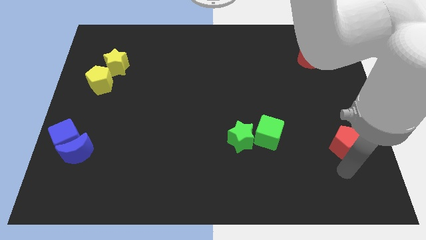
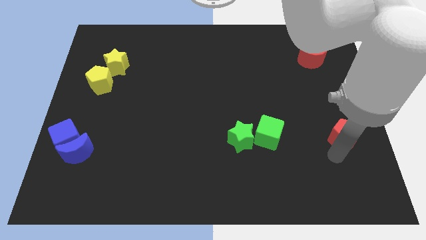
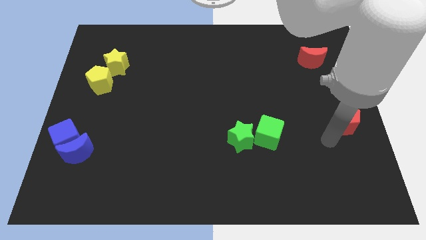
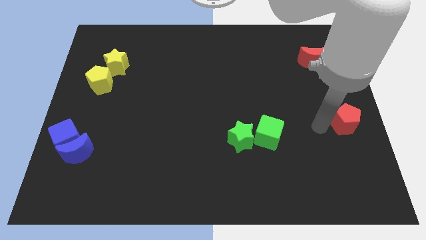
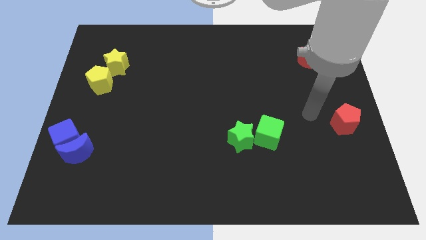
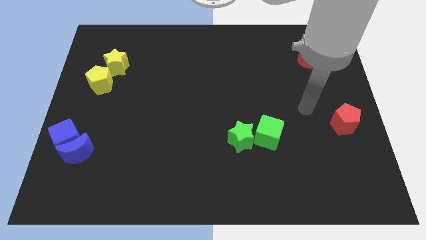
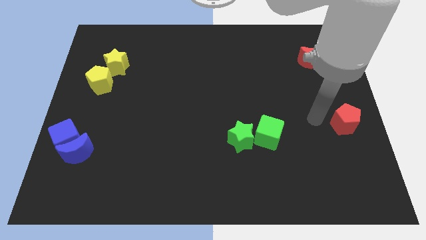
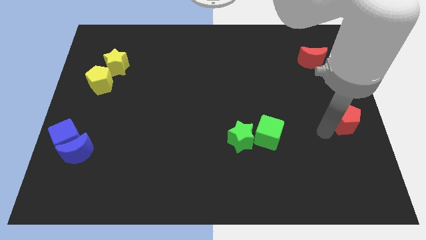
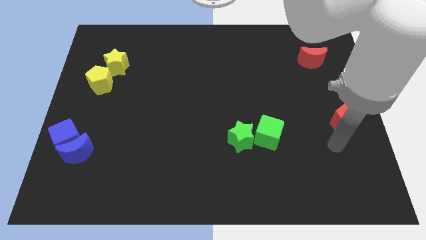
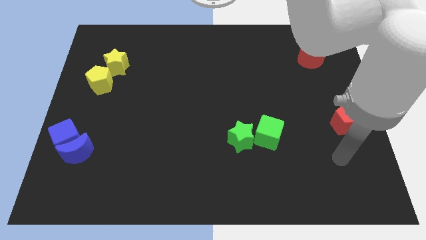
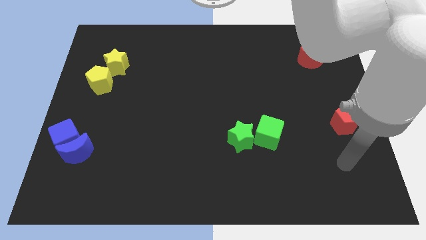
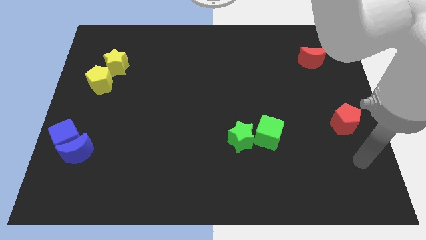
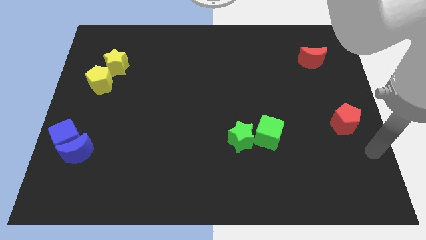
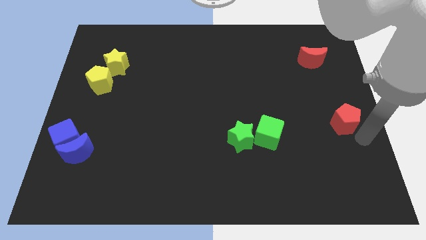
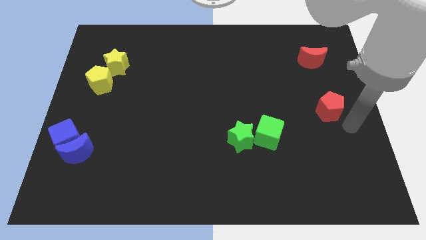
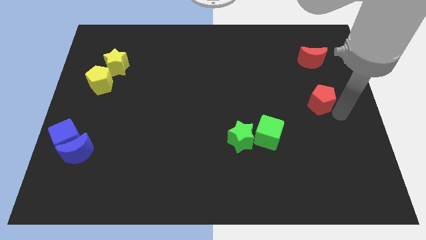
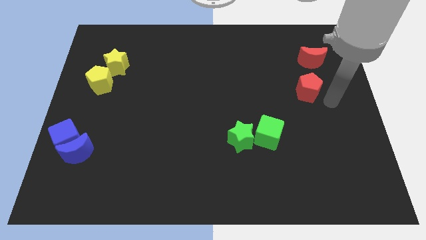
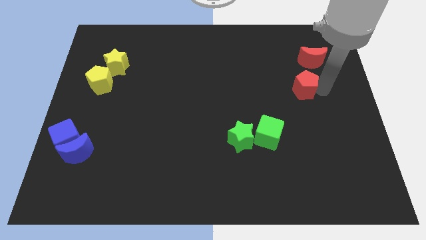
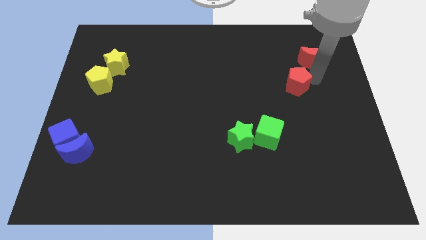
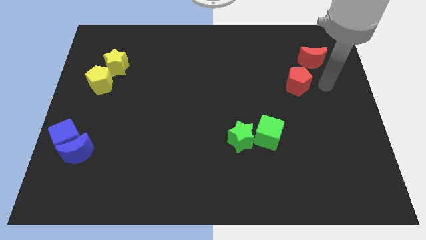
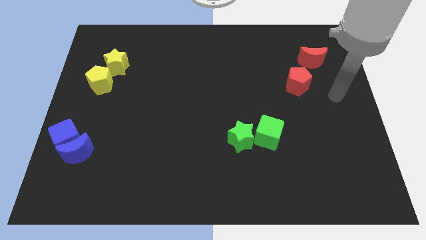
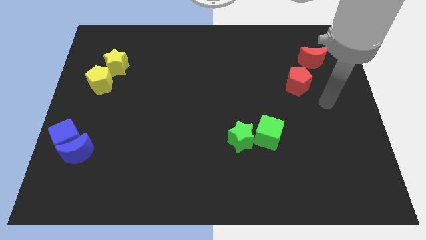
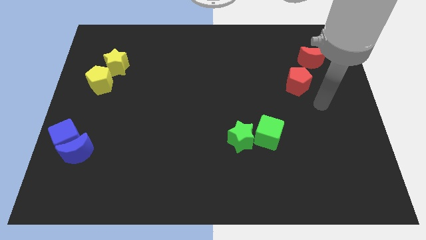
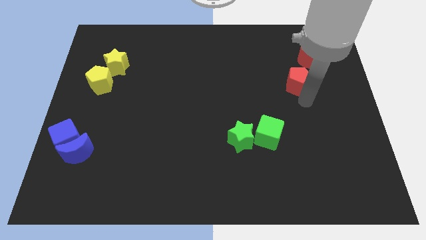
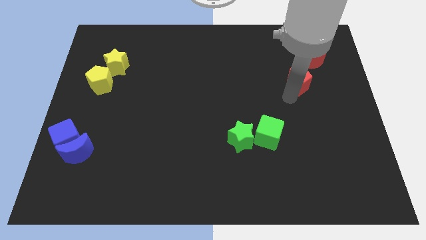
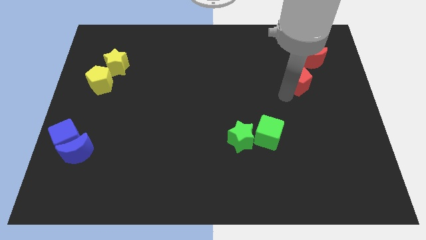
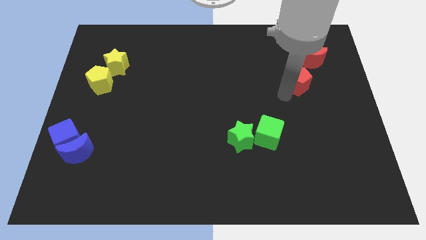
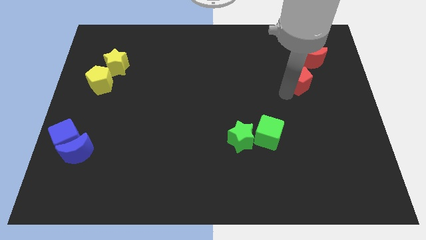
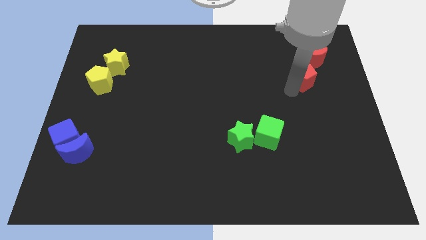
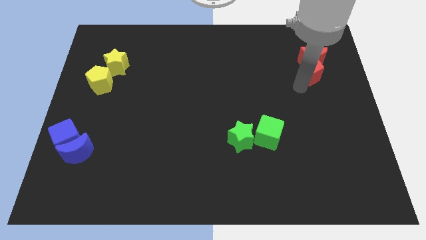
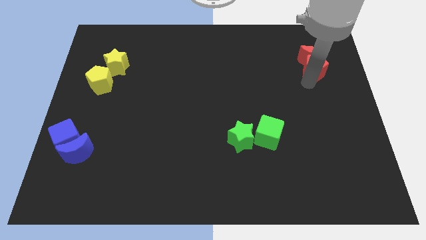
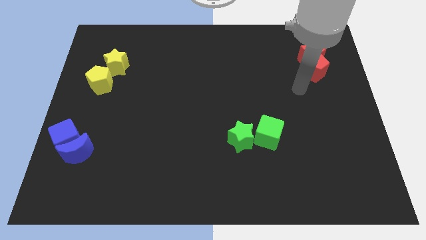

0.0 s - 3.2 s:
place the red pentagon at the bottom of red moon

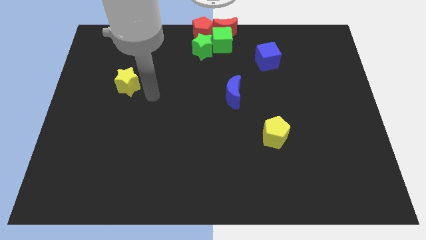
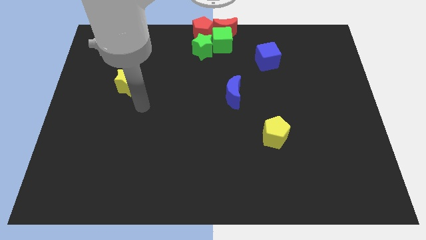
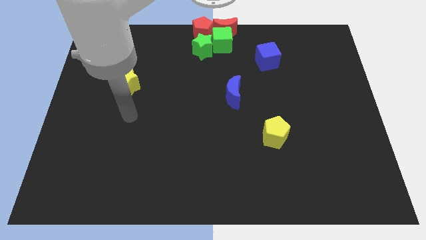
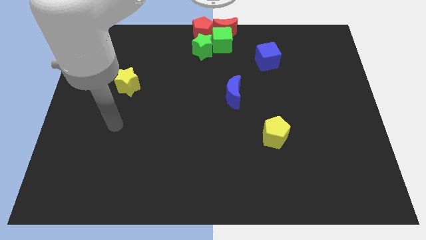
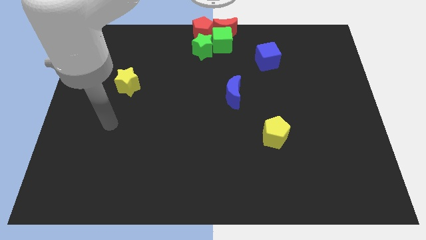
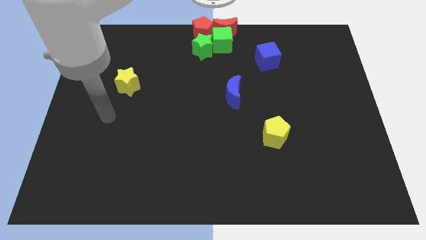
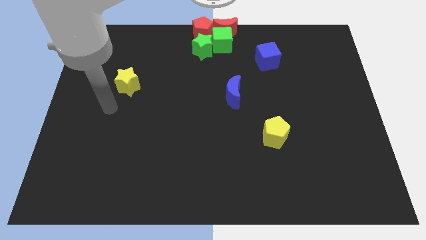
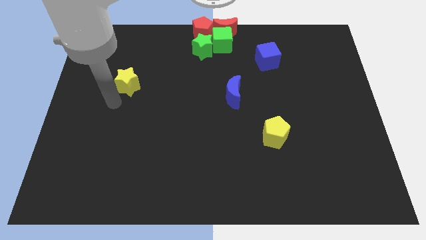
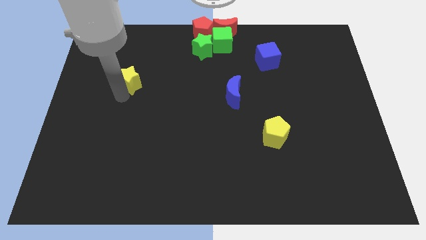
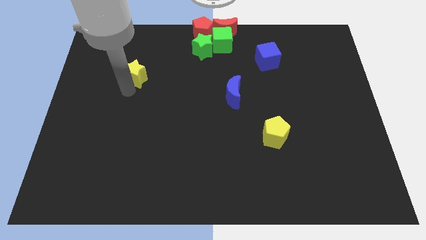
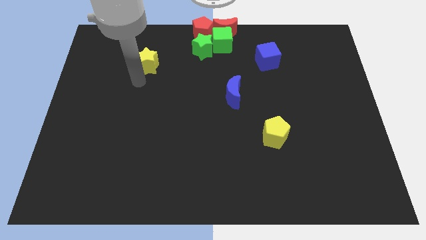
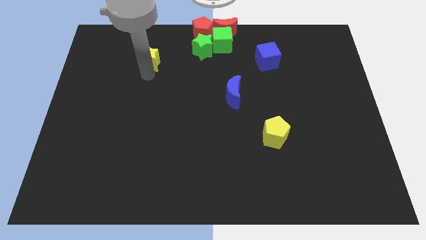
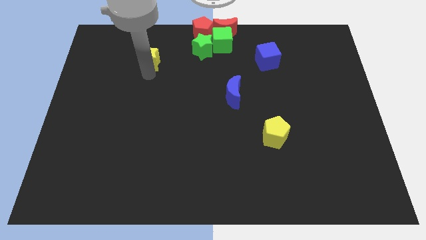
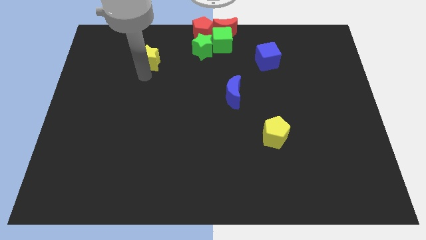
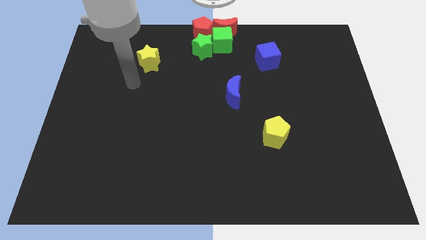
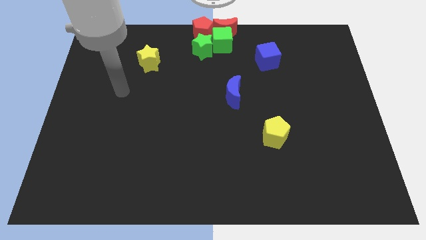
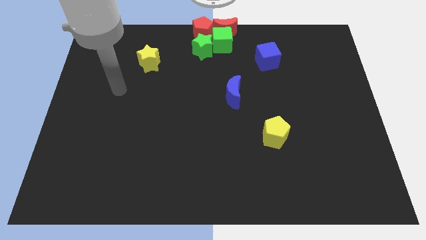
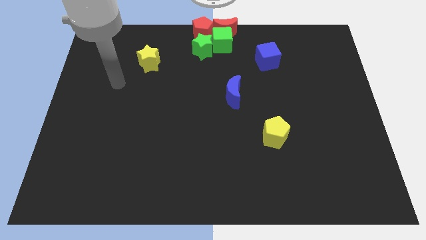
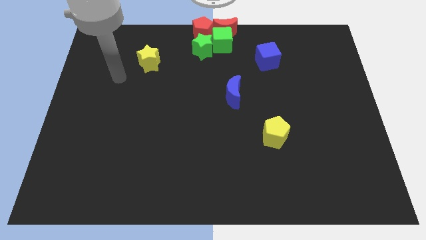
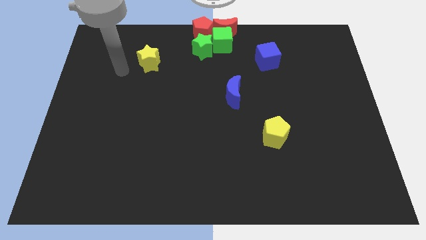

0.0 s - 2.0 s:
push the yellow star upwards

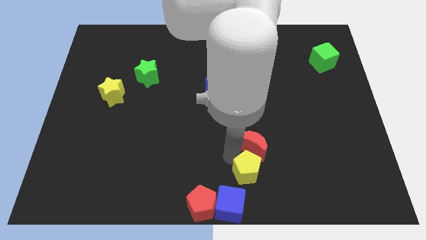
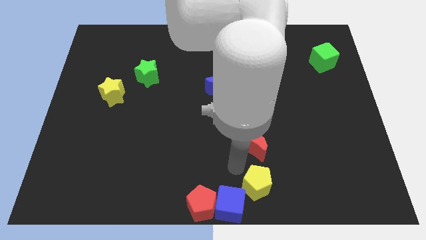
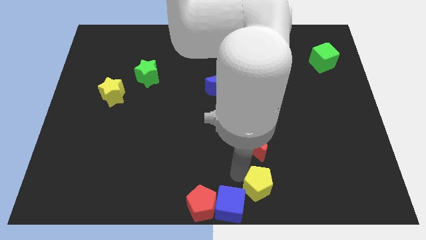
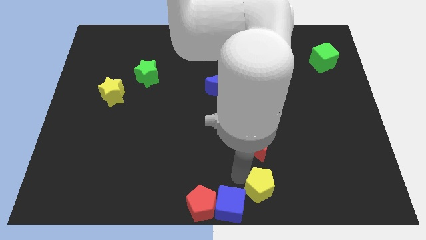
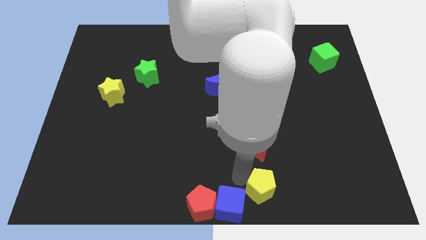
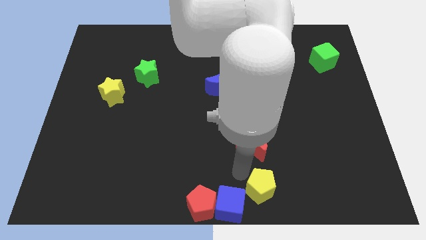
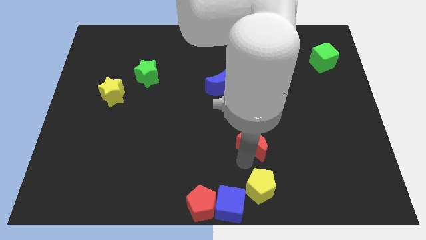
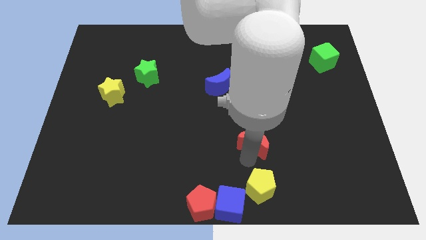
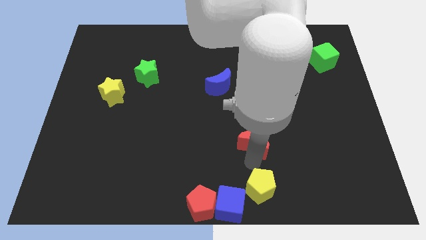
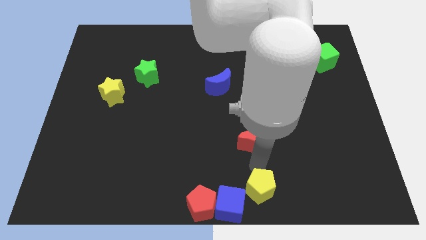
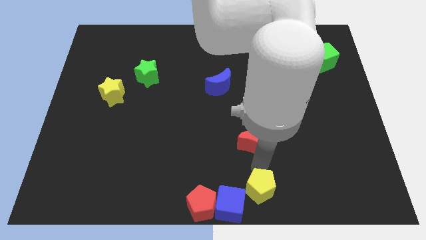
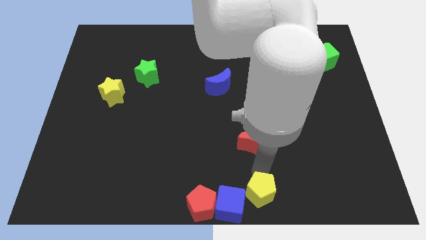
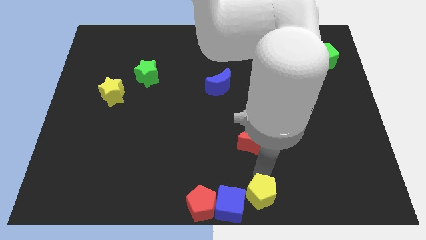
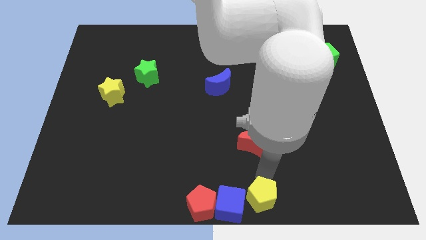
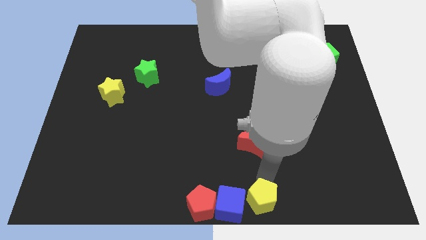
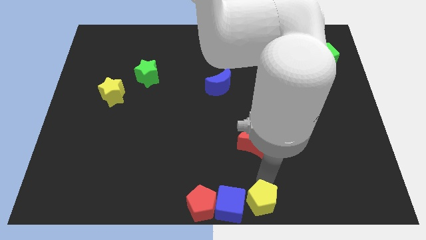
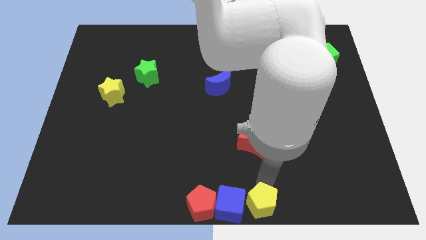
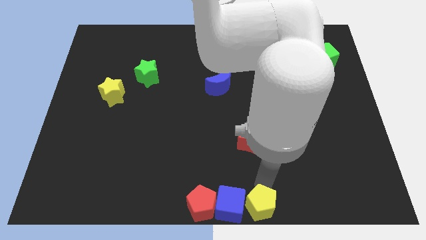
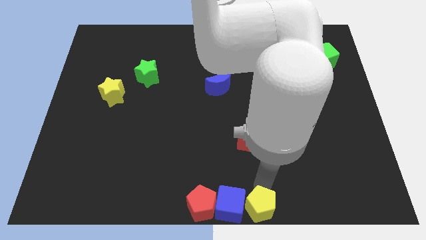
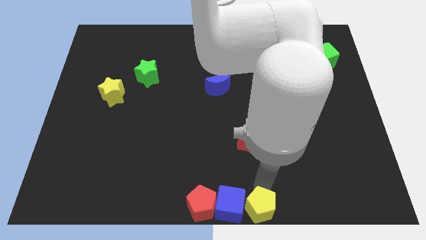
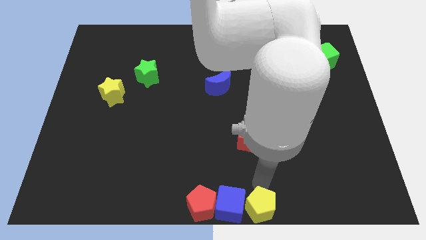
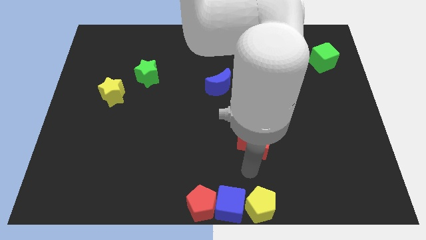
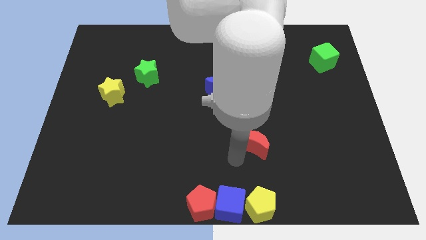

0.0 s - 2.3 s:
place the yellow pentagon right to the blue cube

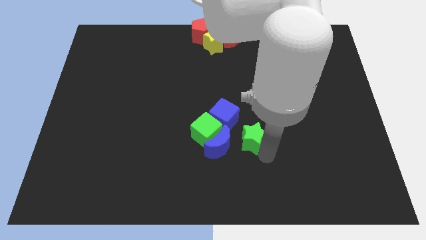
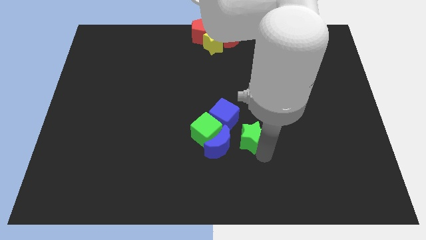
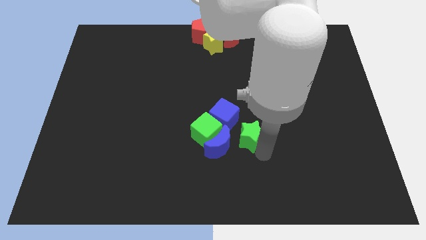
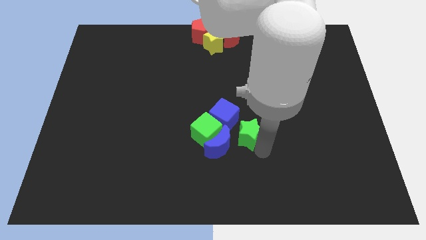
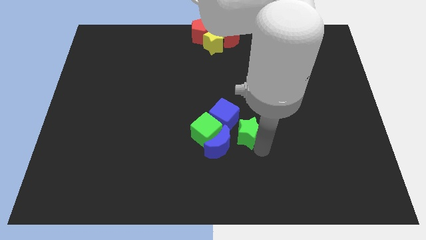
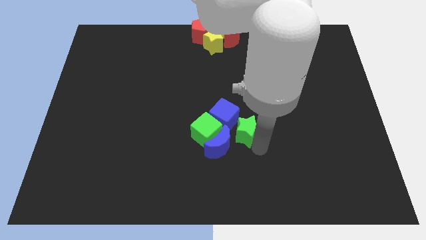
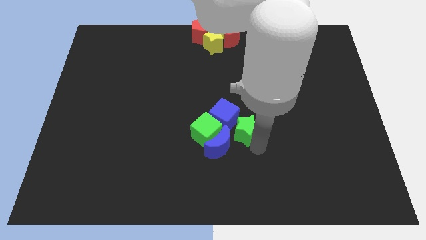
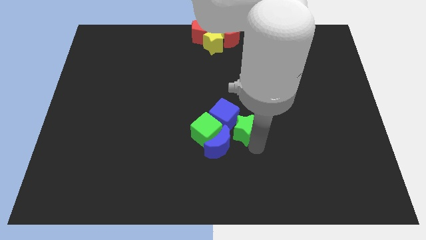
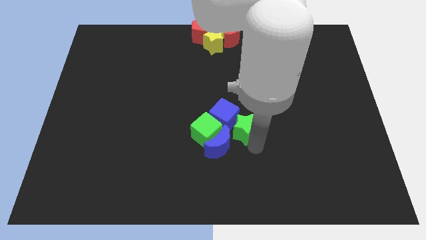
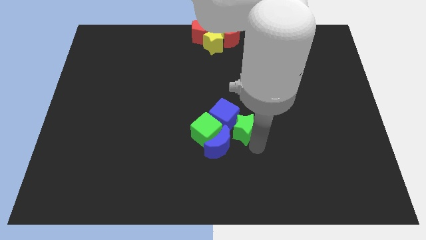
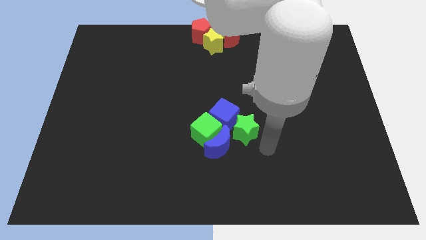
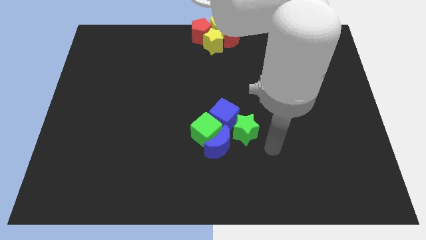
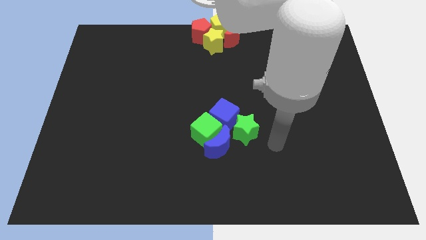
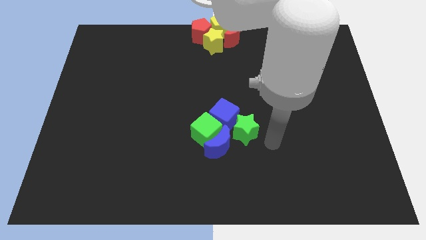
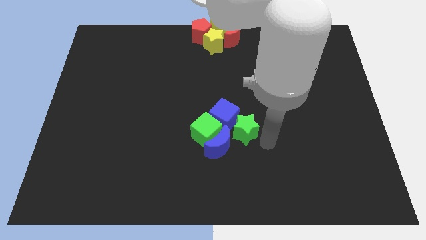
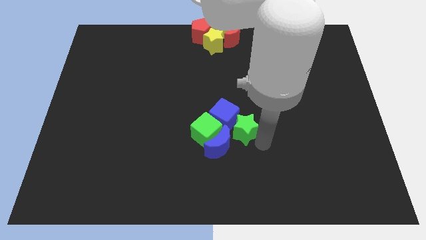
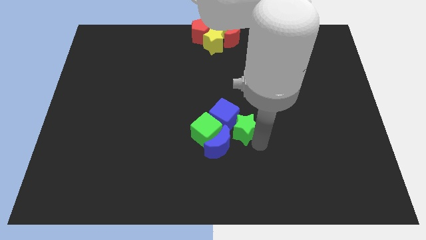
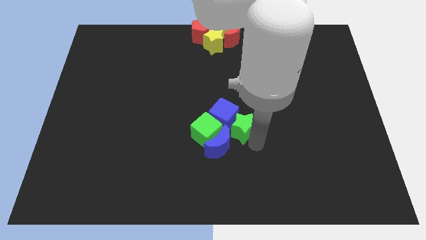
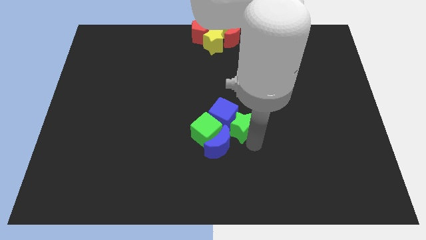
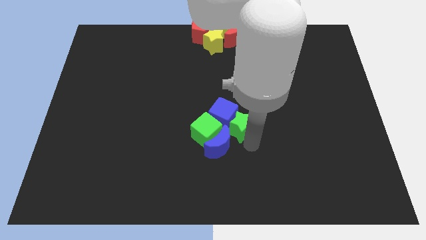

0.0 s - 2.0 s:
move the green star into the blue moon
